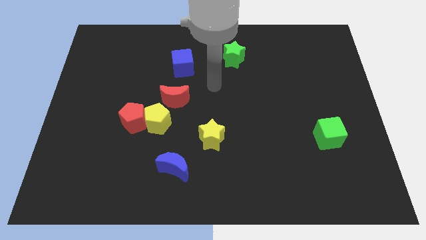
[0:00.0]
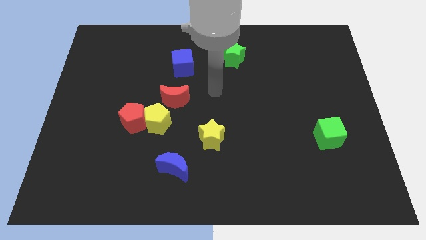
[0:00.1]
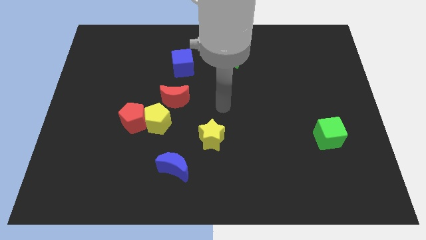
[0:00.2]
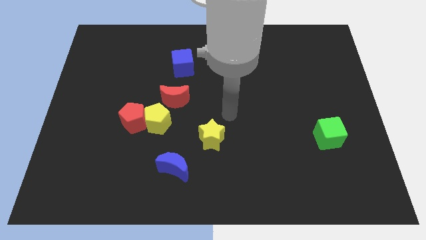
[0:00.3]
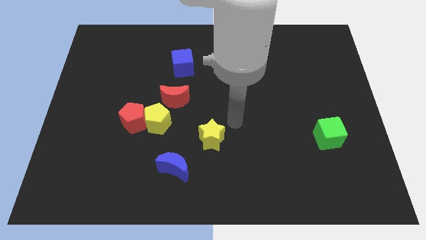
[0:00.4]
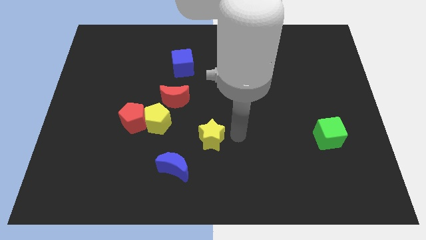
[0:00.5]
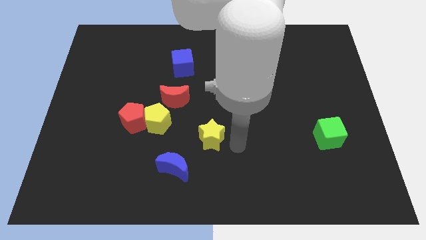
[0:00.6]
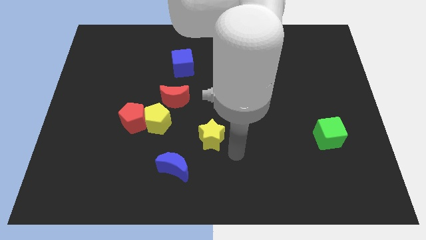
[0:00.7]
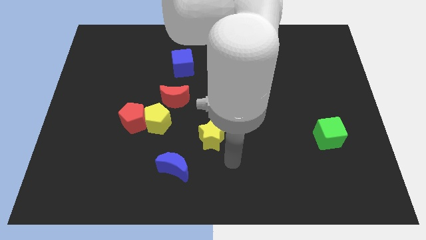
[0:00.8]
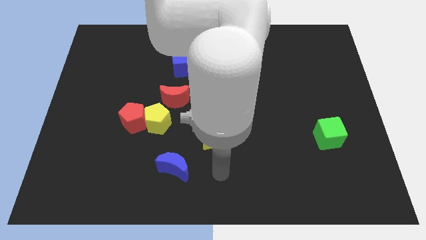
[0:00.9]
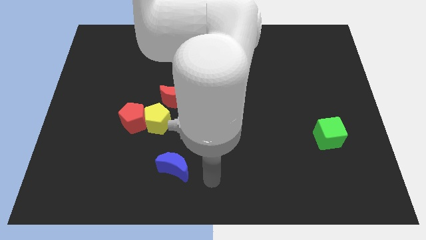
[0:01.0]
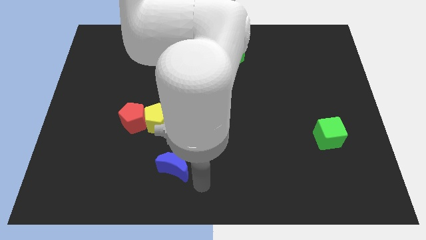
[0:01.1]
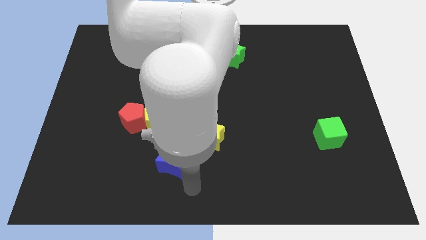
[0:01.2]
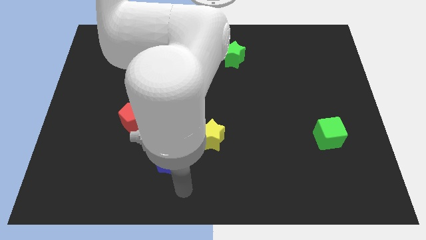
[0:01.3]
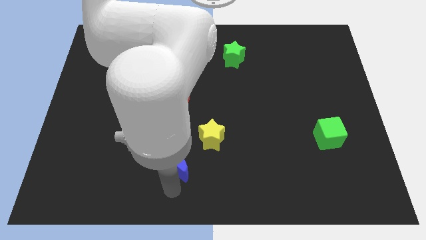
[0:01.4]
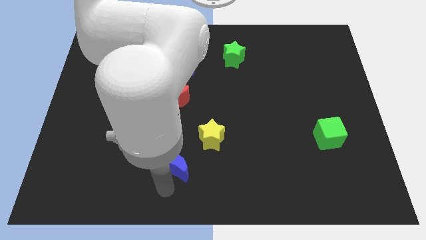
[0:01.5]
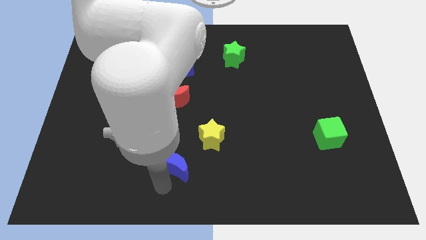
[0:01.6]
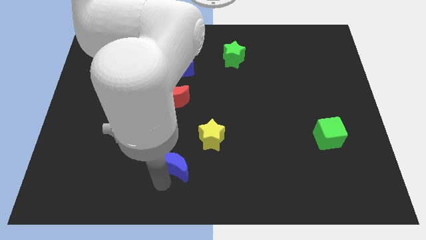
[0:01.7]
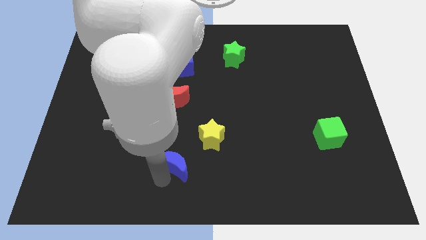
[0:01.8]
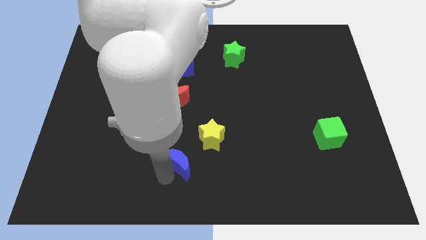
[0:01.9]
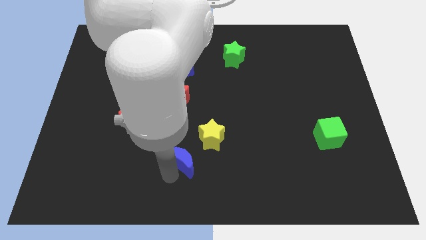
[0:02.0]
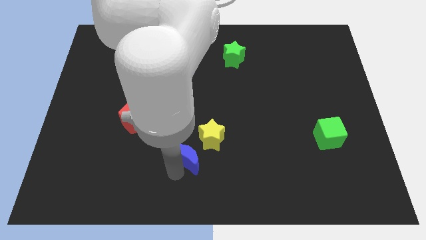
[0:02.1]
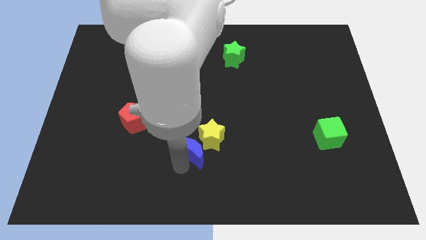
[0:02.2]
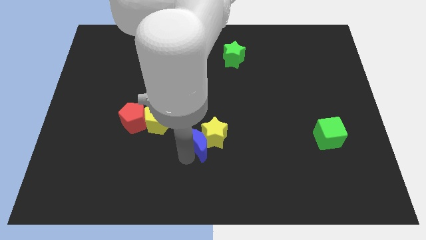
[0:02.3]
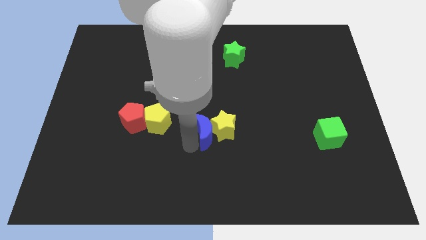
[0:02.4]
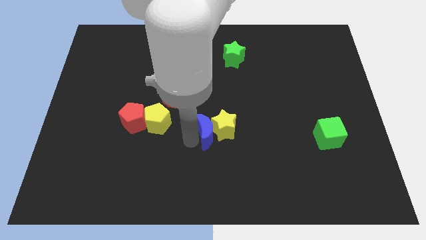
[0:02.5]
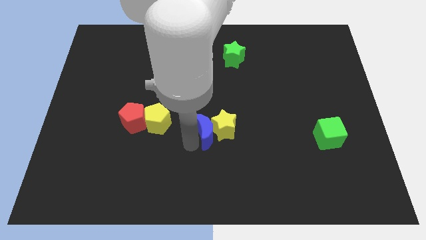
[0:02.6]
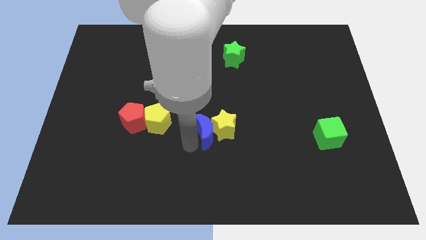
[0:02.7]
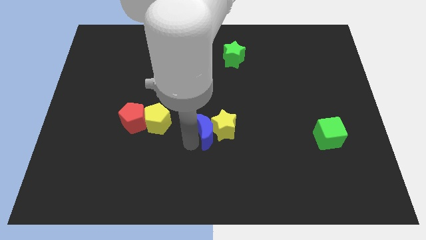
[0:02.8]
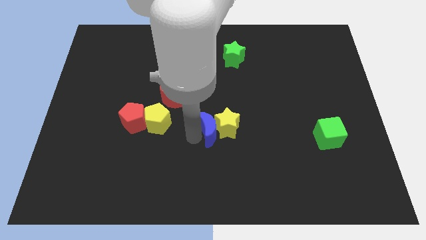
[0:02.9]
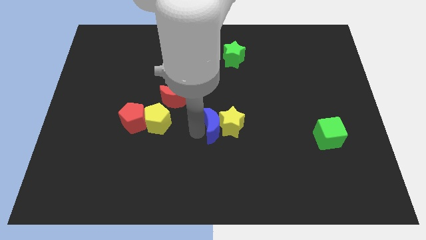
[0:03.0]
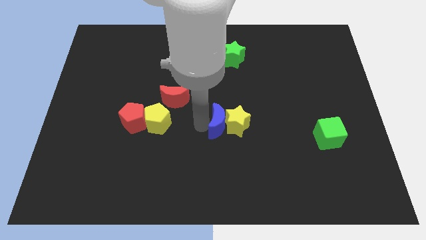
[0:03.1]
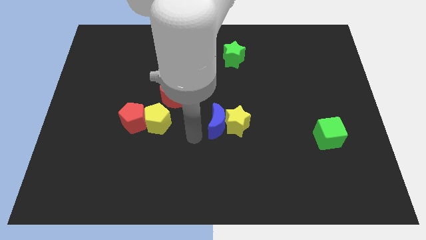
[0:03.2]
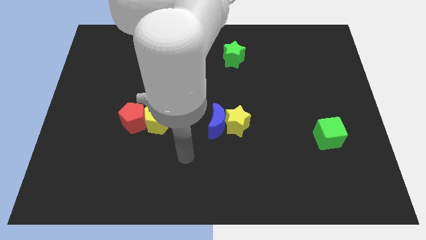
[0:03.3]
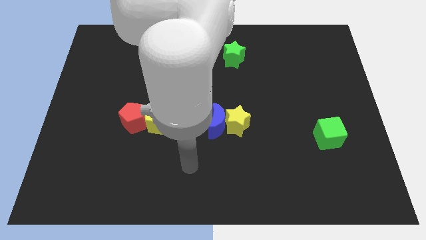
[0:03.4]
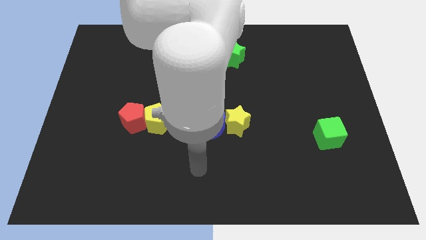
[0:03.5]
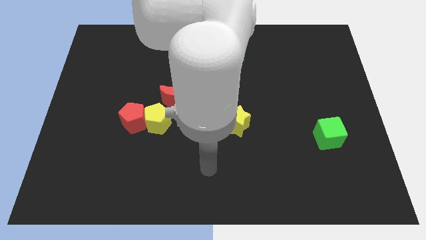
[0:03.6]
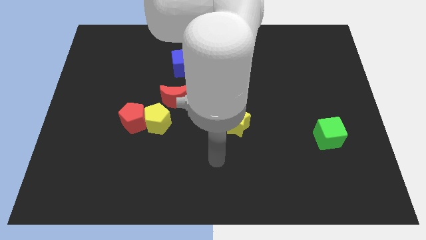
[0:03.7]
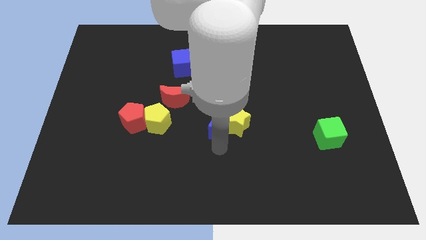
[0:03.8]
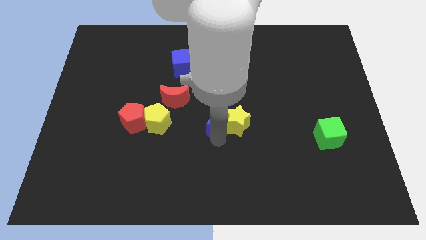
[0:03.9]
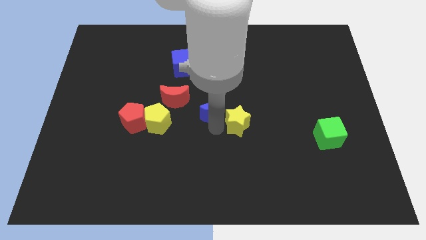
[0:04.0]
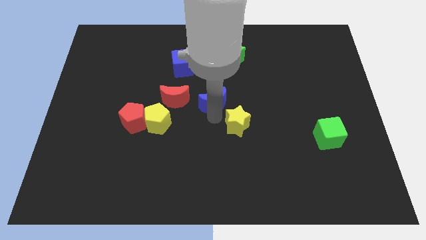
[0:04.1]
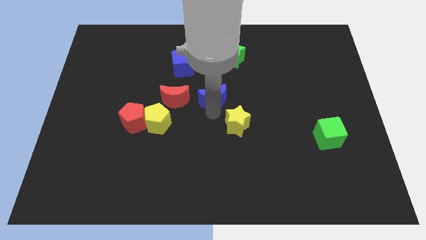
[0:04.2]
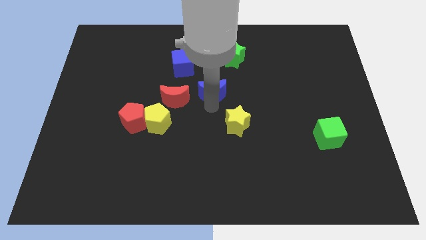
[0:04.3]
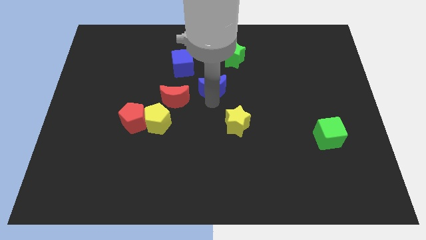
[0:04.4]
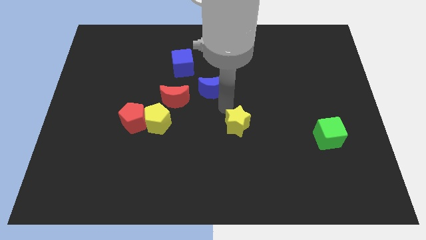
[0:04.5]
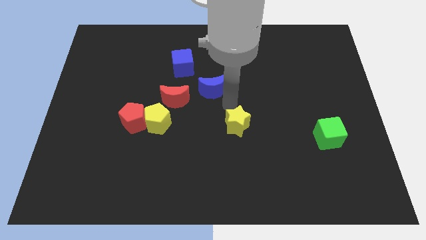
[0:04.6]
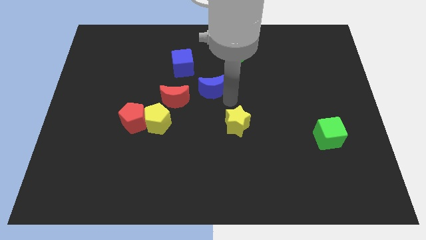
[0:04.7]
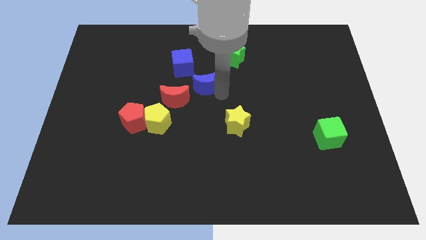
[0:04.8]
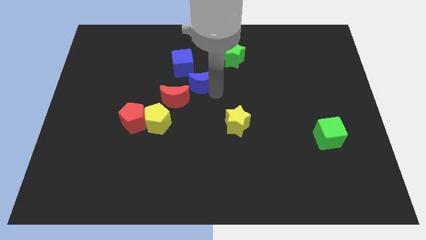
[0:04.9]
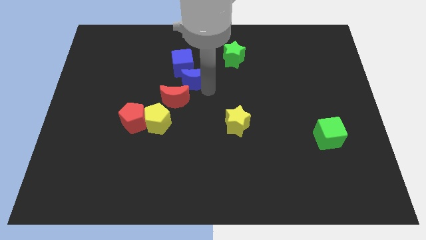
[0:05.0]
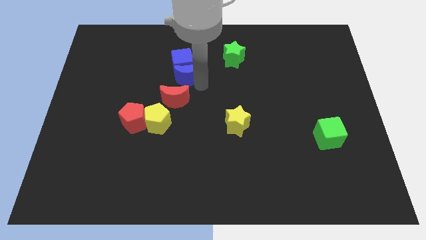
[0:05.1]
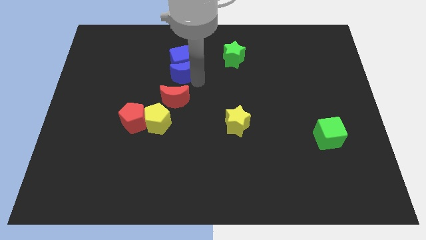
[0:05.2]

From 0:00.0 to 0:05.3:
push the blue moon close to the blue cube

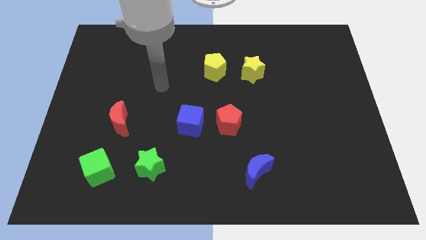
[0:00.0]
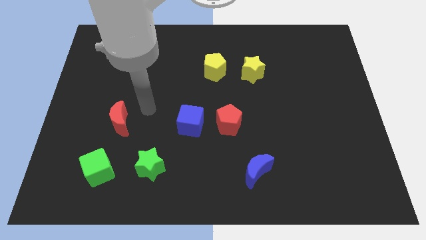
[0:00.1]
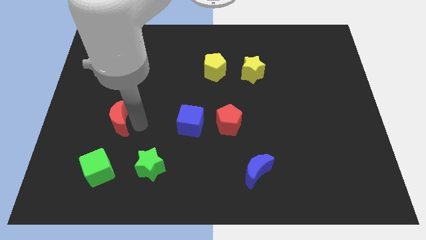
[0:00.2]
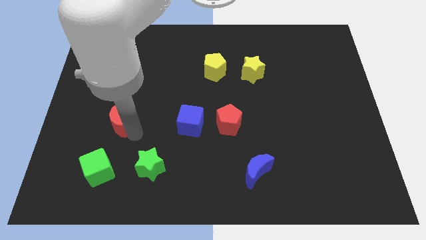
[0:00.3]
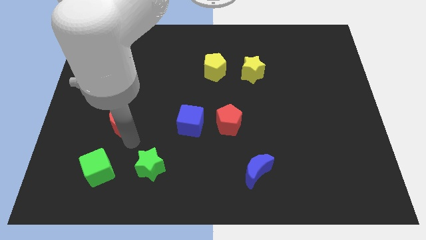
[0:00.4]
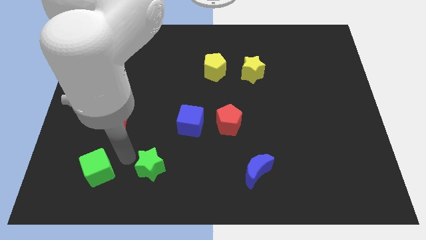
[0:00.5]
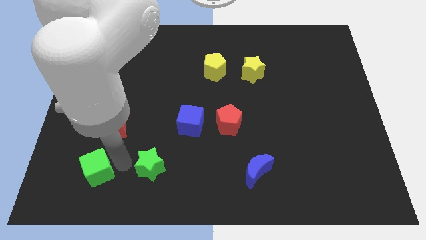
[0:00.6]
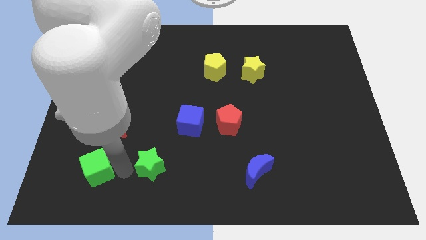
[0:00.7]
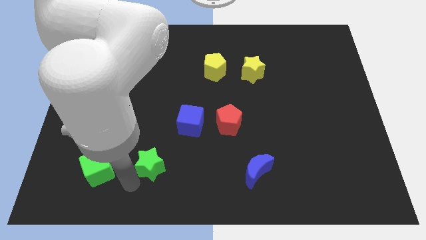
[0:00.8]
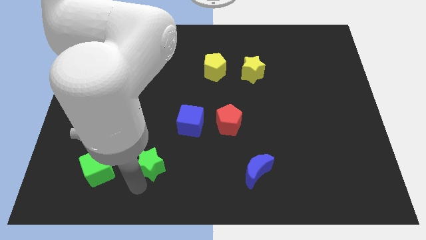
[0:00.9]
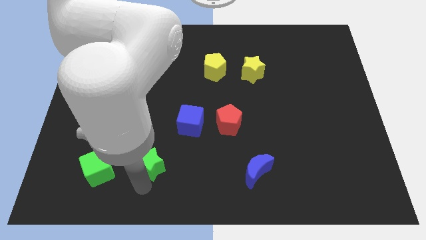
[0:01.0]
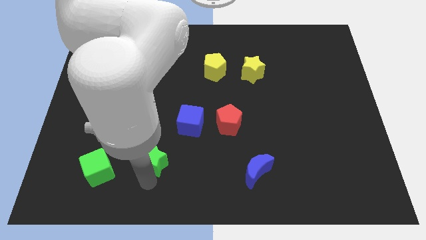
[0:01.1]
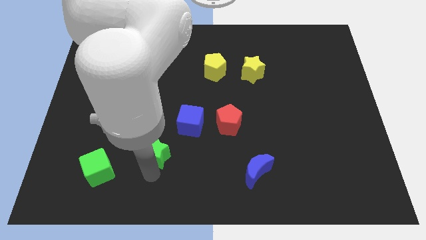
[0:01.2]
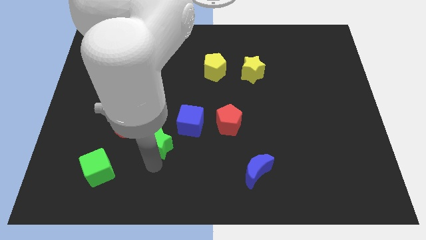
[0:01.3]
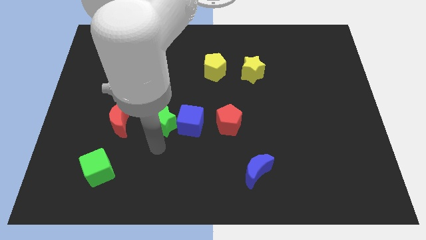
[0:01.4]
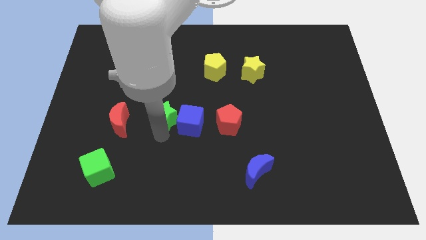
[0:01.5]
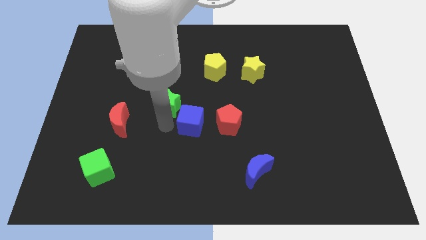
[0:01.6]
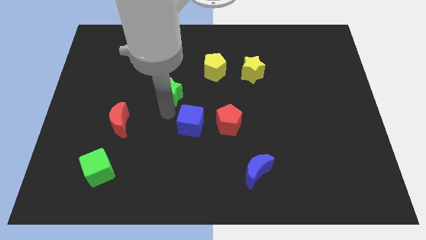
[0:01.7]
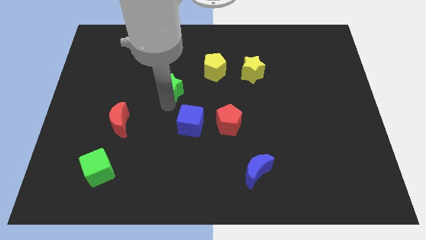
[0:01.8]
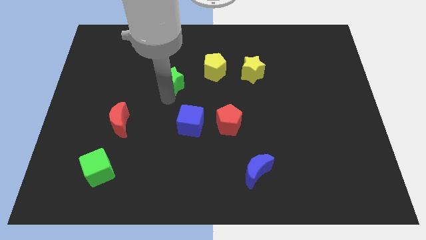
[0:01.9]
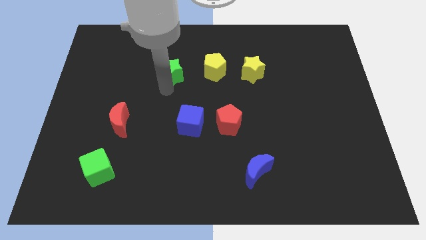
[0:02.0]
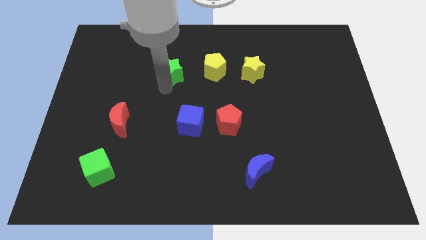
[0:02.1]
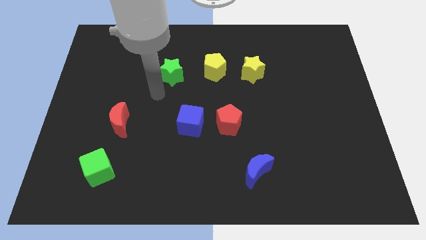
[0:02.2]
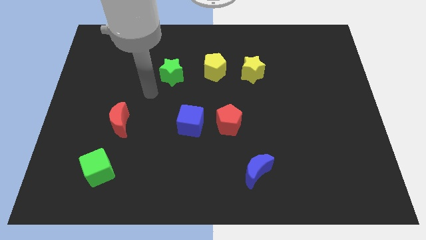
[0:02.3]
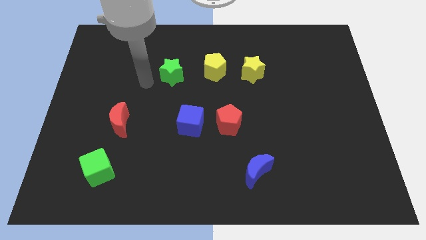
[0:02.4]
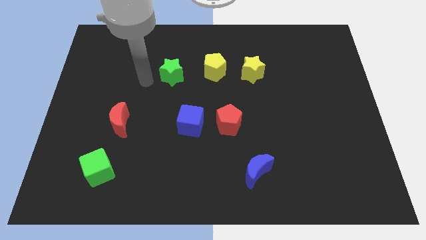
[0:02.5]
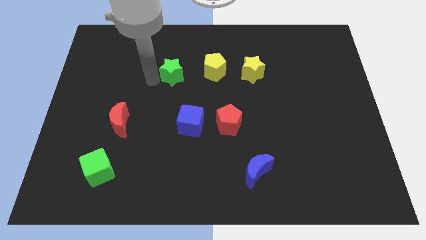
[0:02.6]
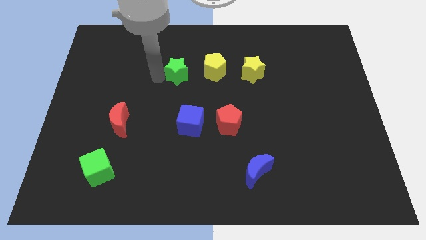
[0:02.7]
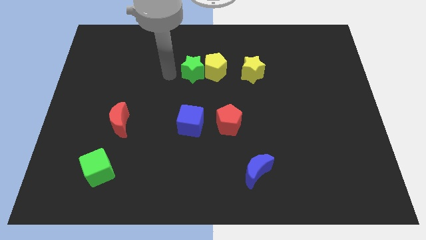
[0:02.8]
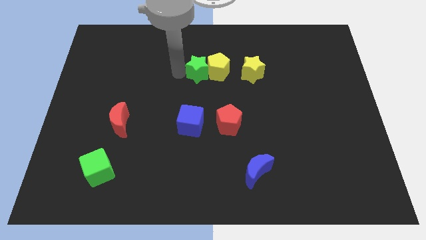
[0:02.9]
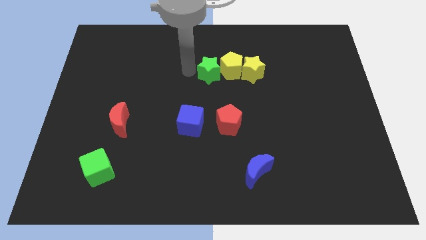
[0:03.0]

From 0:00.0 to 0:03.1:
push the green star close to the yellow pentagon
